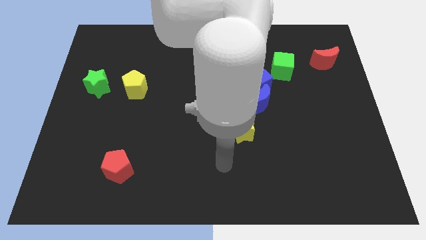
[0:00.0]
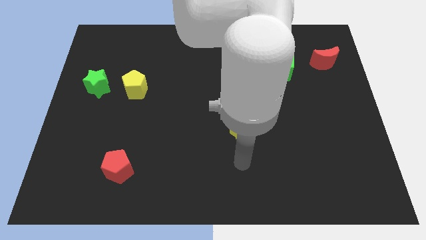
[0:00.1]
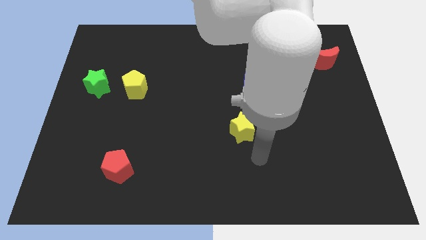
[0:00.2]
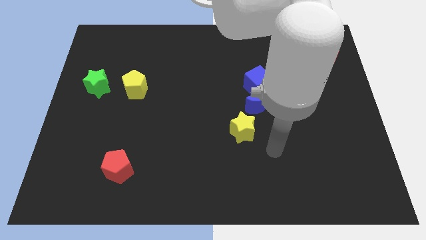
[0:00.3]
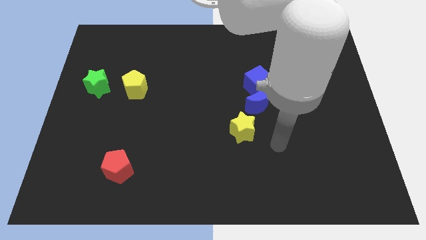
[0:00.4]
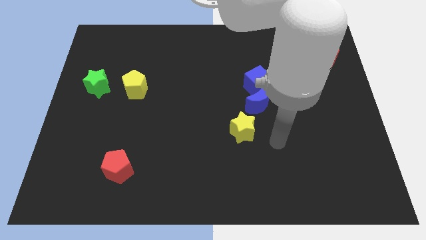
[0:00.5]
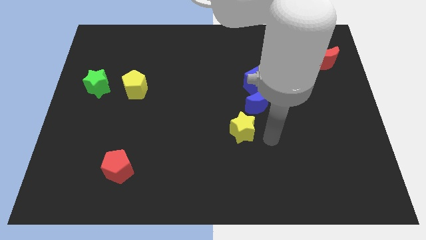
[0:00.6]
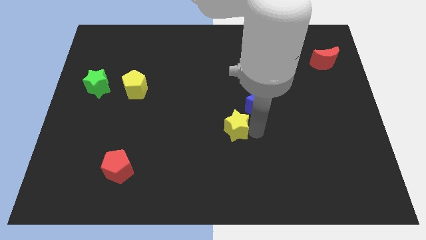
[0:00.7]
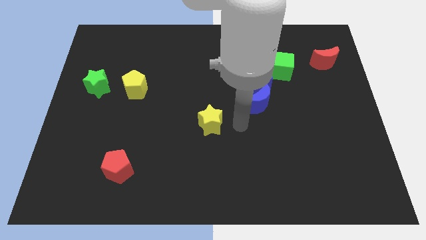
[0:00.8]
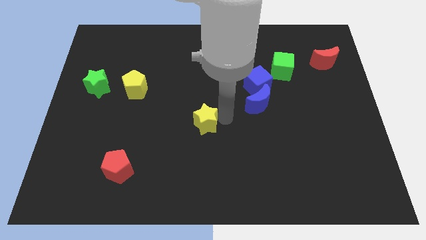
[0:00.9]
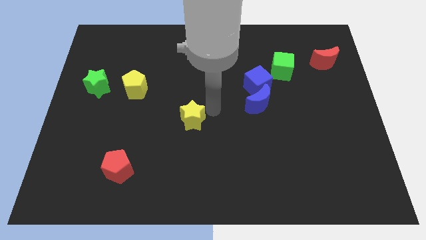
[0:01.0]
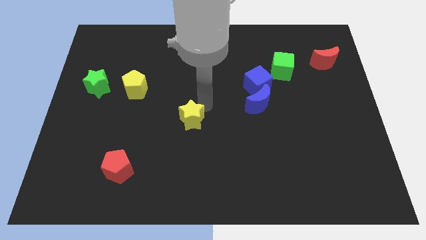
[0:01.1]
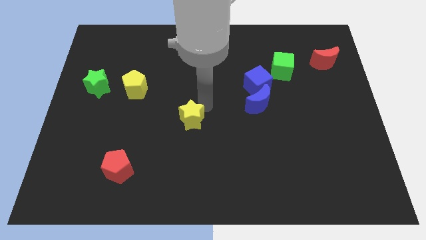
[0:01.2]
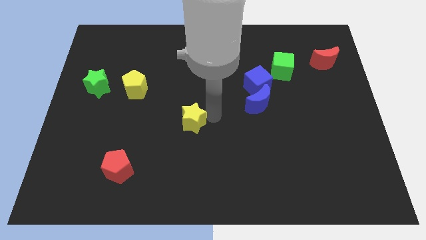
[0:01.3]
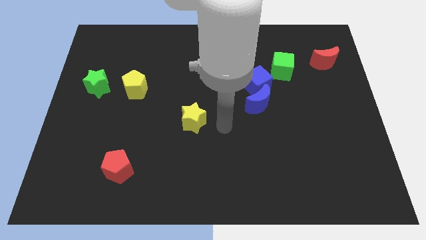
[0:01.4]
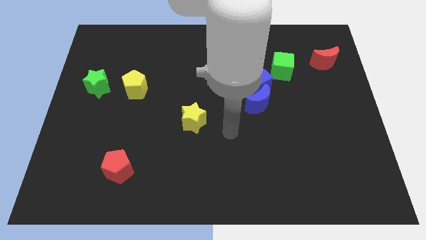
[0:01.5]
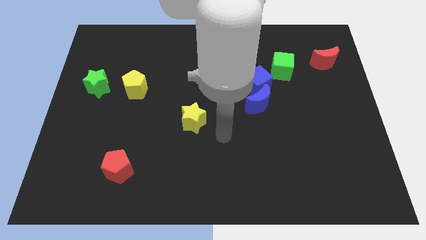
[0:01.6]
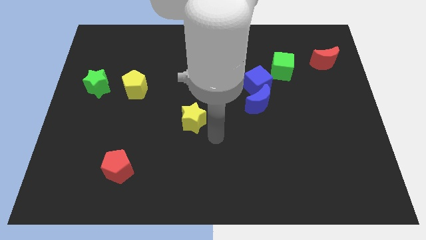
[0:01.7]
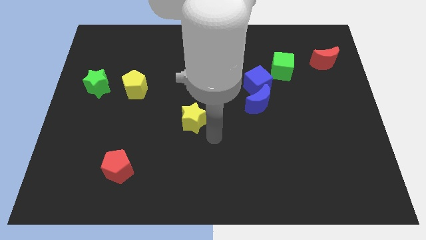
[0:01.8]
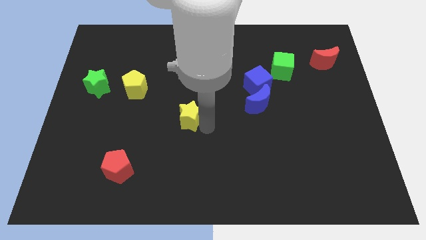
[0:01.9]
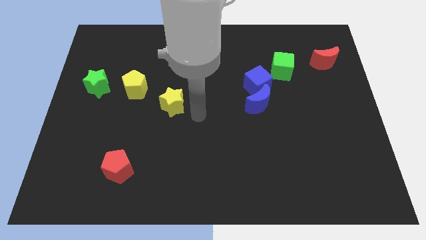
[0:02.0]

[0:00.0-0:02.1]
place a yellow star towards the center of the board

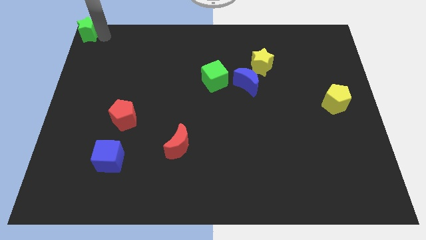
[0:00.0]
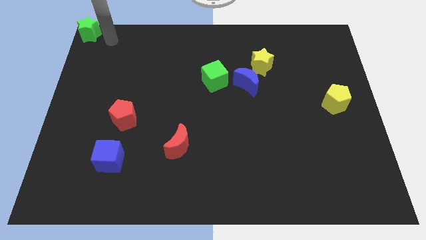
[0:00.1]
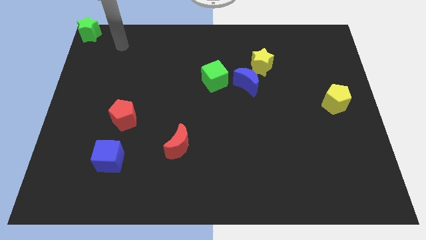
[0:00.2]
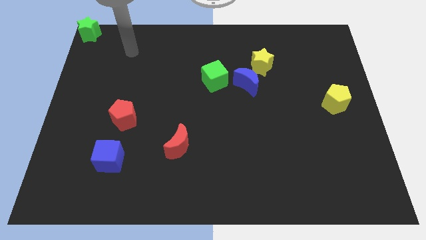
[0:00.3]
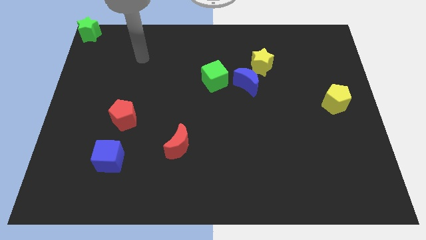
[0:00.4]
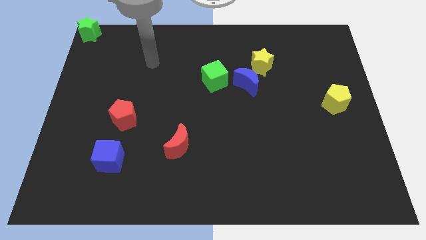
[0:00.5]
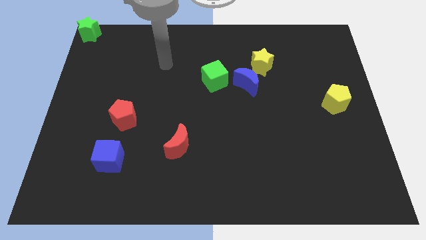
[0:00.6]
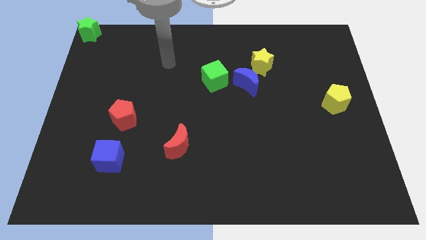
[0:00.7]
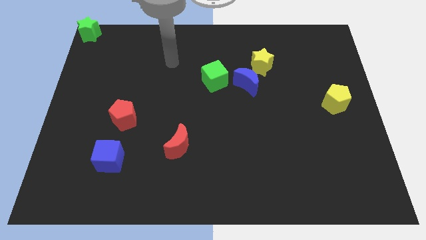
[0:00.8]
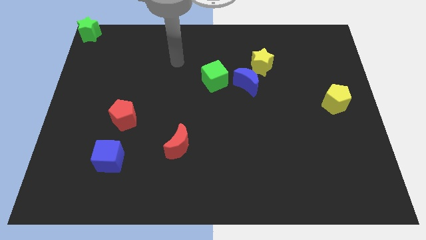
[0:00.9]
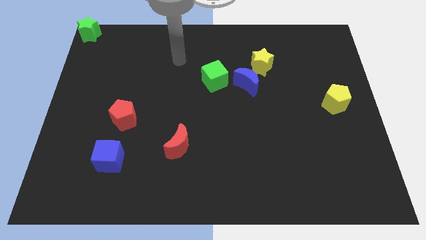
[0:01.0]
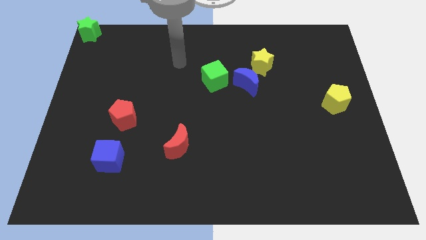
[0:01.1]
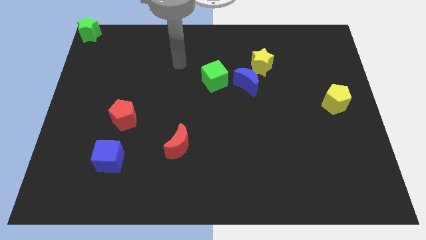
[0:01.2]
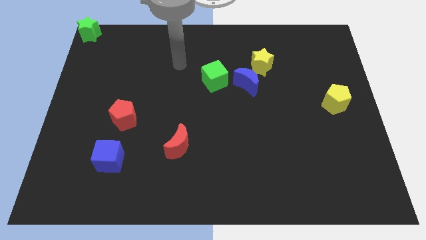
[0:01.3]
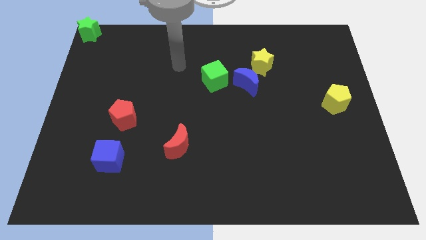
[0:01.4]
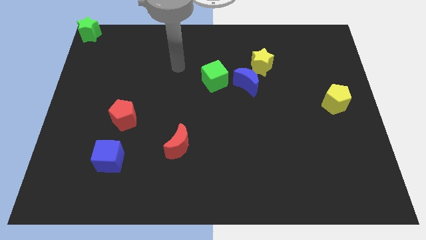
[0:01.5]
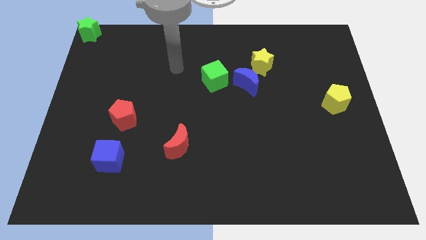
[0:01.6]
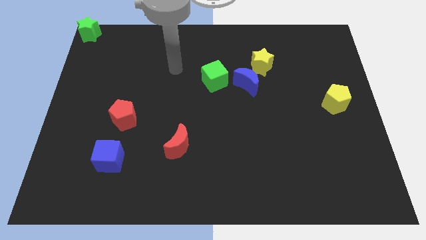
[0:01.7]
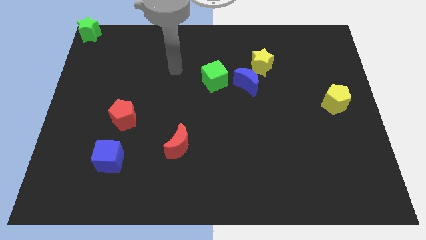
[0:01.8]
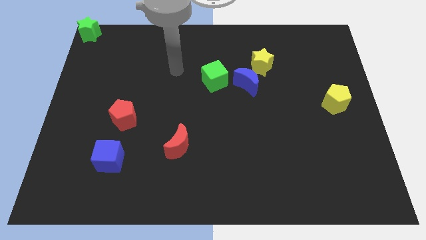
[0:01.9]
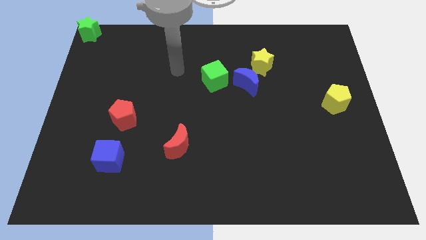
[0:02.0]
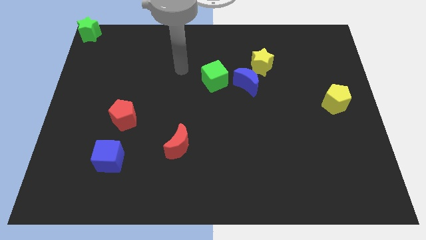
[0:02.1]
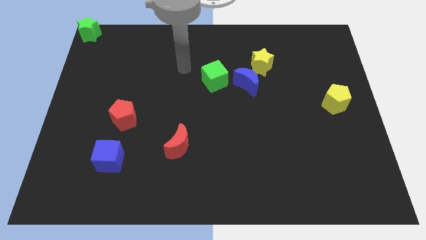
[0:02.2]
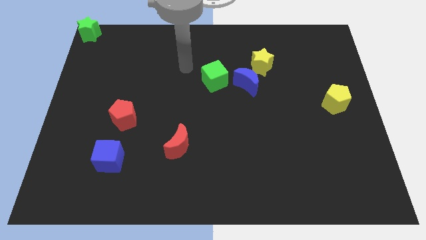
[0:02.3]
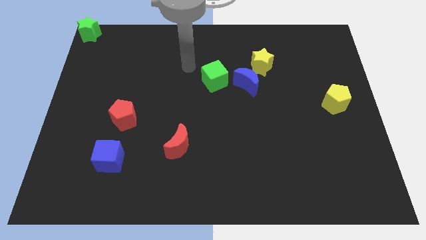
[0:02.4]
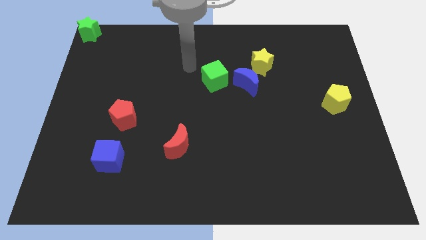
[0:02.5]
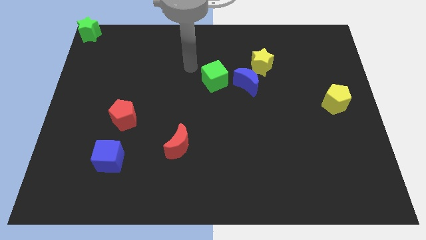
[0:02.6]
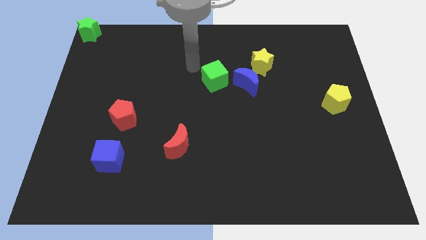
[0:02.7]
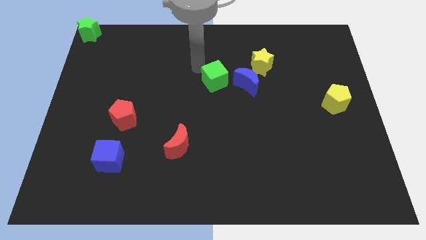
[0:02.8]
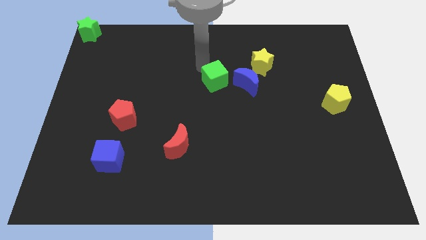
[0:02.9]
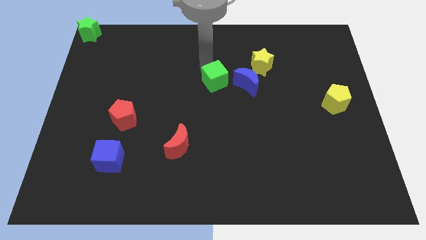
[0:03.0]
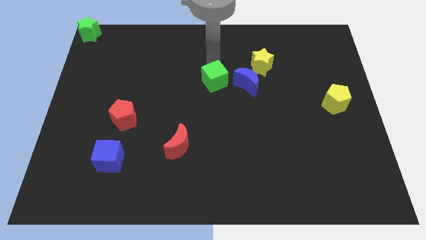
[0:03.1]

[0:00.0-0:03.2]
move your arm towards the green cube

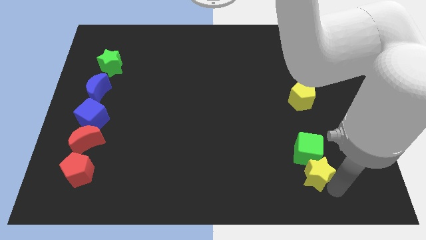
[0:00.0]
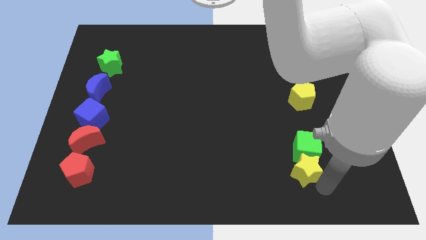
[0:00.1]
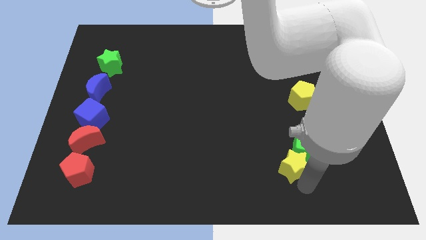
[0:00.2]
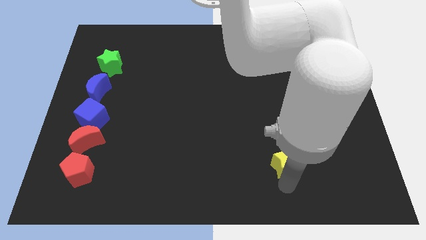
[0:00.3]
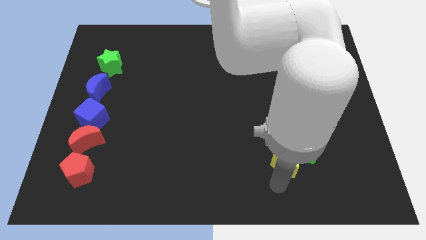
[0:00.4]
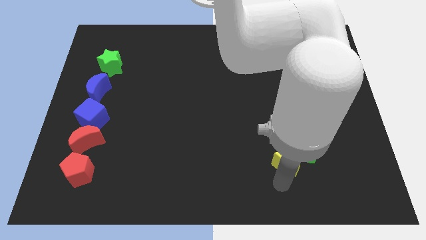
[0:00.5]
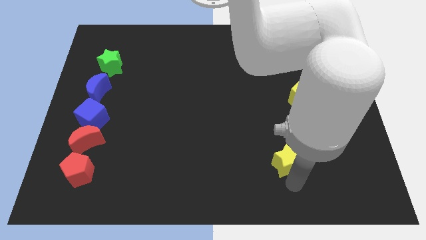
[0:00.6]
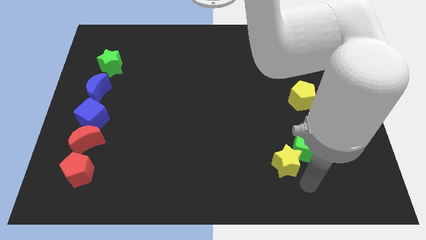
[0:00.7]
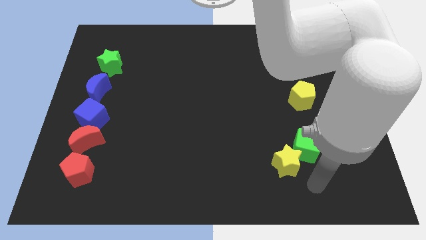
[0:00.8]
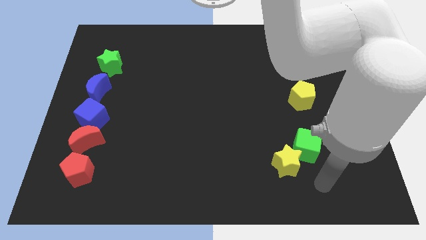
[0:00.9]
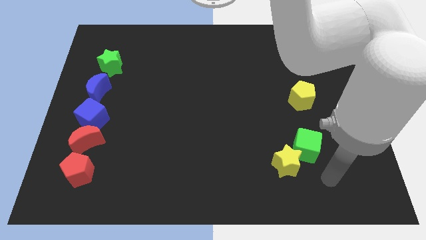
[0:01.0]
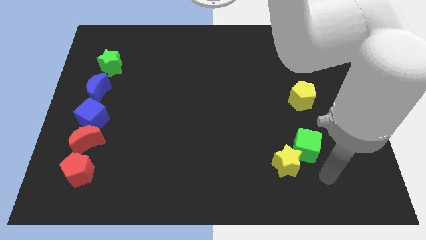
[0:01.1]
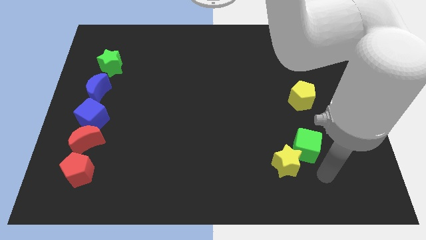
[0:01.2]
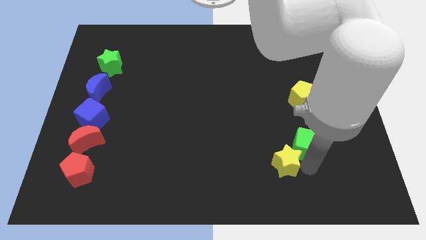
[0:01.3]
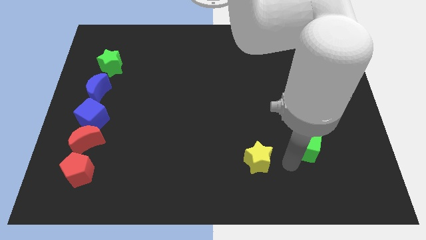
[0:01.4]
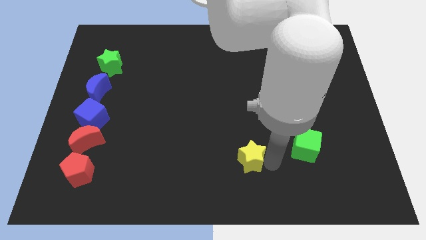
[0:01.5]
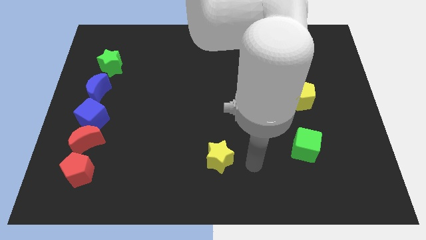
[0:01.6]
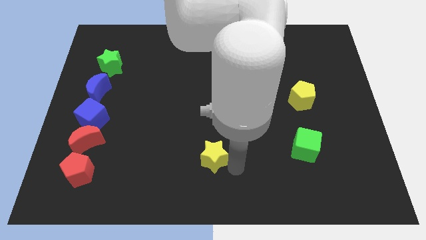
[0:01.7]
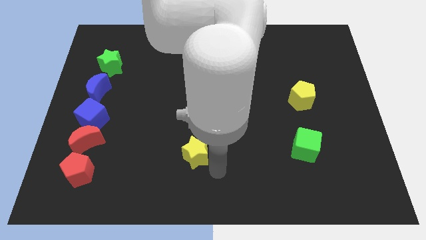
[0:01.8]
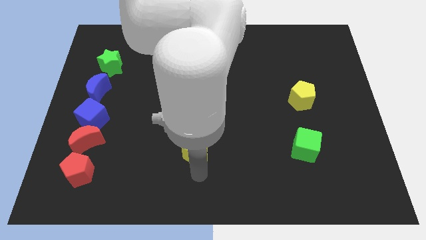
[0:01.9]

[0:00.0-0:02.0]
separate the yellow star from the green cube

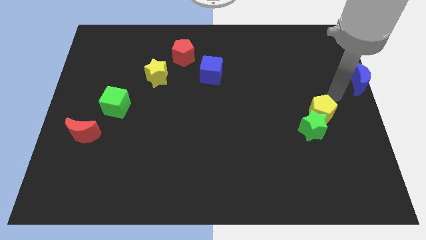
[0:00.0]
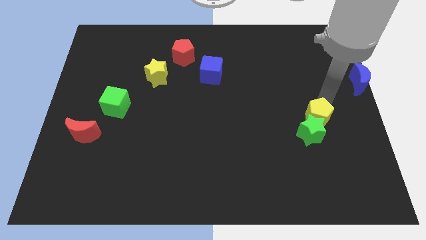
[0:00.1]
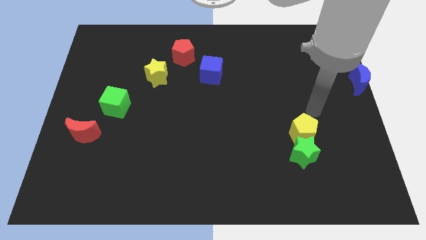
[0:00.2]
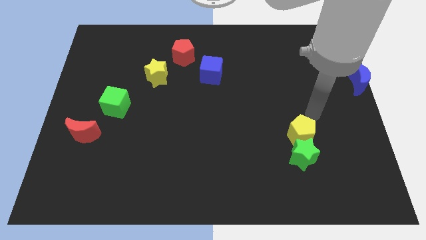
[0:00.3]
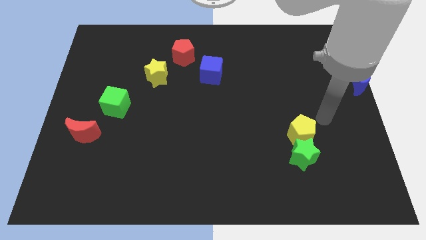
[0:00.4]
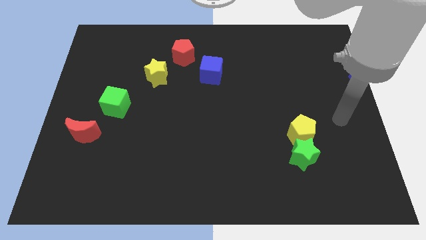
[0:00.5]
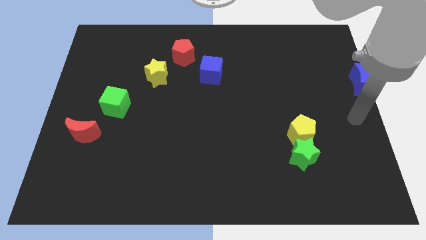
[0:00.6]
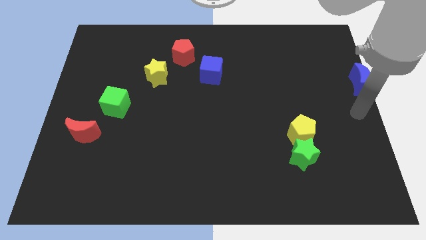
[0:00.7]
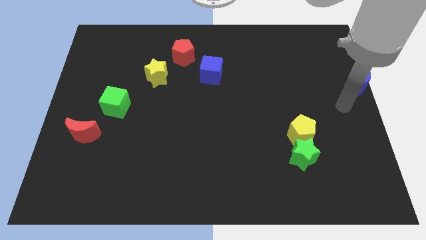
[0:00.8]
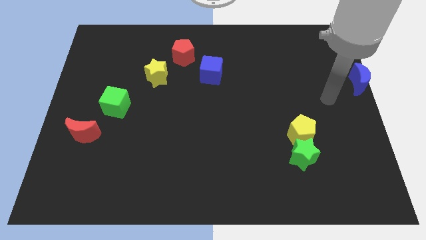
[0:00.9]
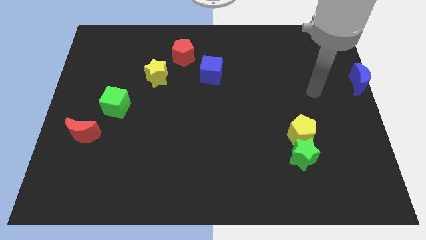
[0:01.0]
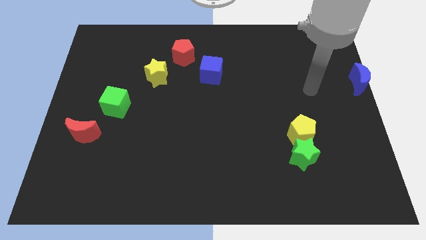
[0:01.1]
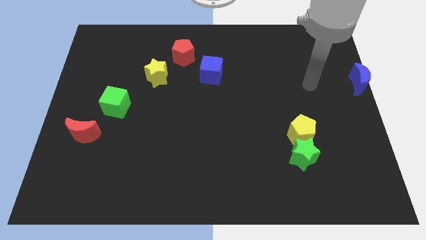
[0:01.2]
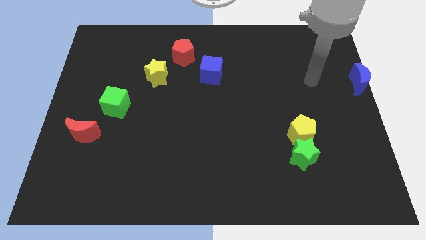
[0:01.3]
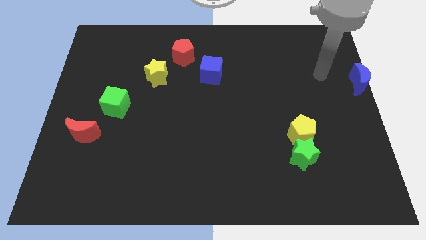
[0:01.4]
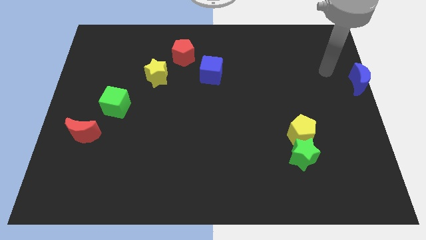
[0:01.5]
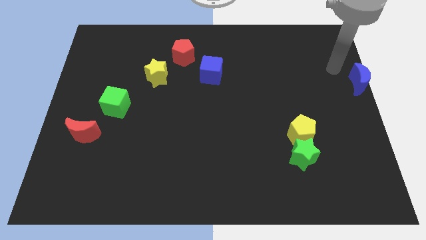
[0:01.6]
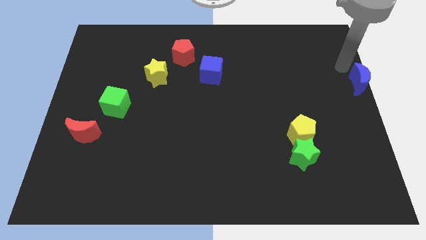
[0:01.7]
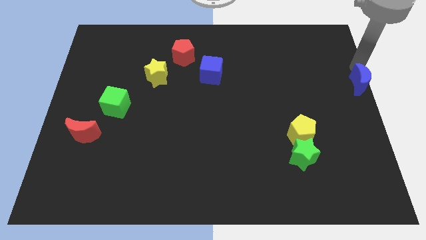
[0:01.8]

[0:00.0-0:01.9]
adjust the yellow pentagon vertically above the green star
